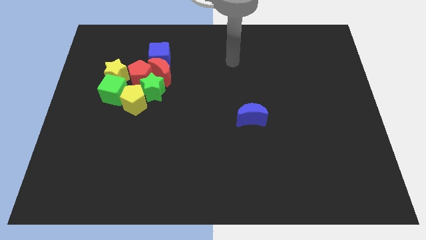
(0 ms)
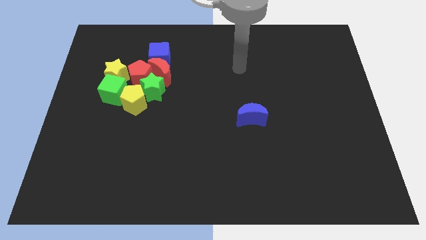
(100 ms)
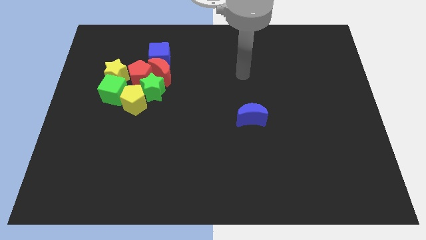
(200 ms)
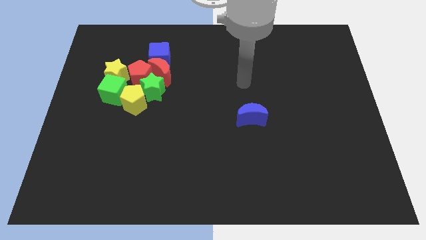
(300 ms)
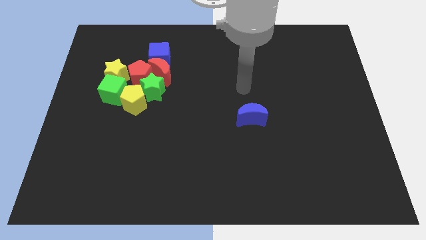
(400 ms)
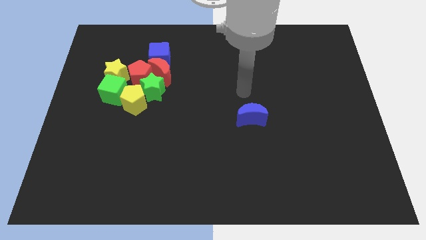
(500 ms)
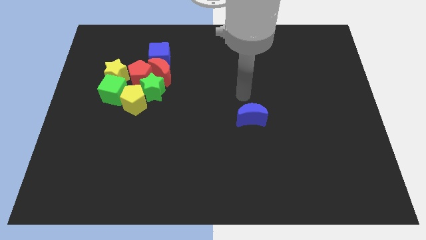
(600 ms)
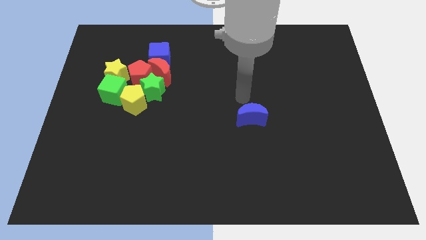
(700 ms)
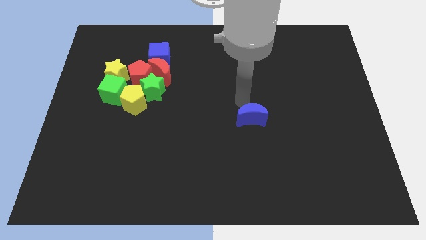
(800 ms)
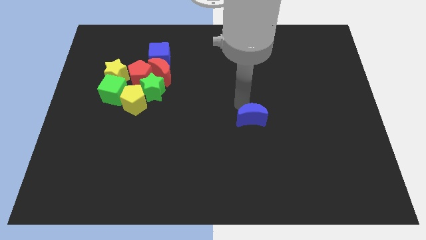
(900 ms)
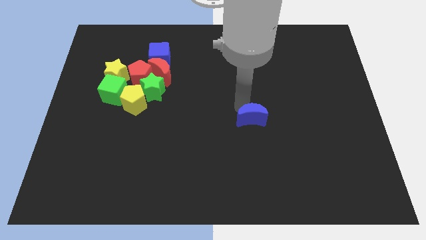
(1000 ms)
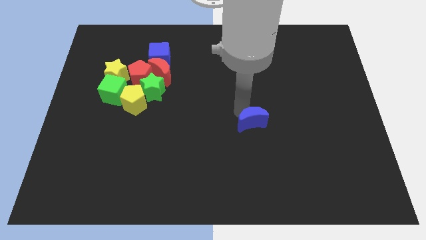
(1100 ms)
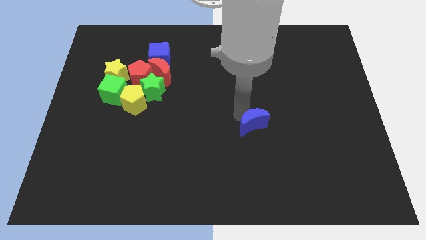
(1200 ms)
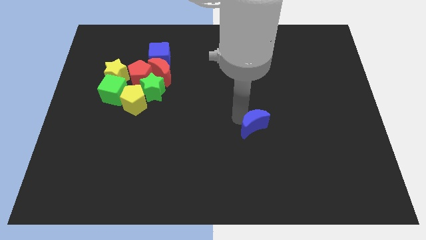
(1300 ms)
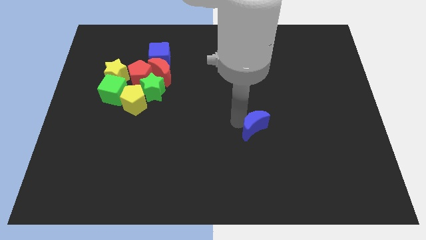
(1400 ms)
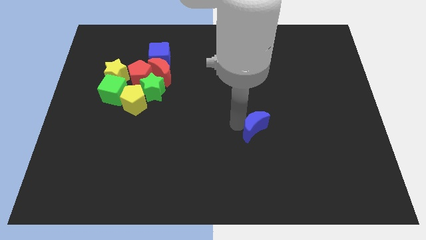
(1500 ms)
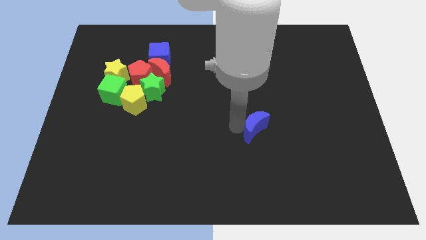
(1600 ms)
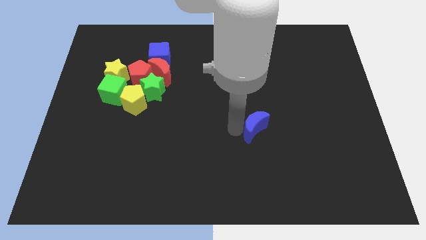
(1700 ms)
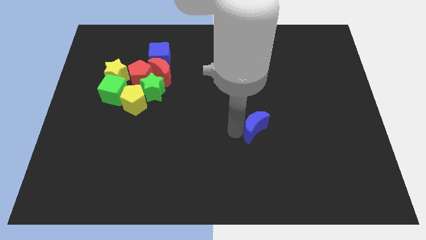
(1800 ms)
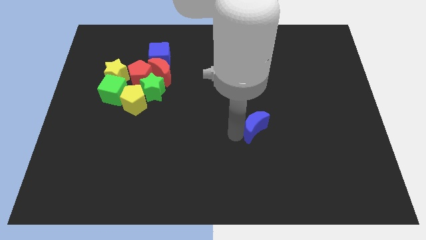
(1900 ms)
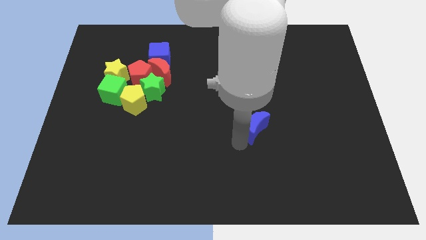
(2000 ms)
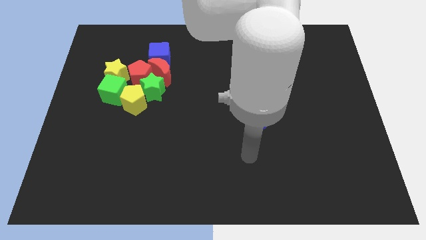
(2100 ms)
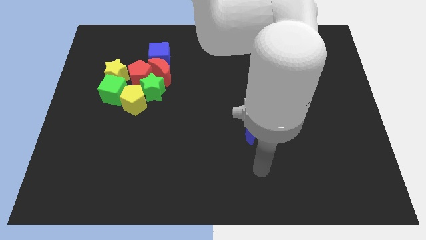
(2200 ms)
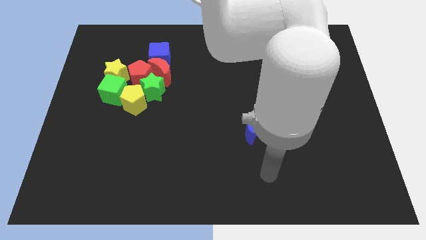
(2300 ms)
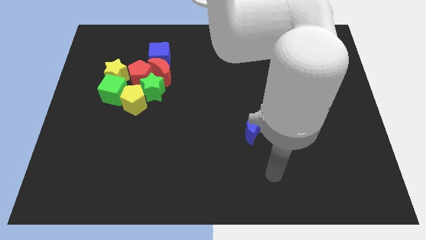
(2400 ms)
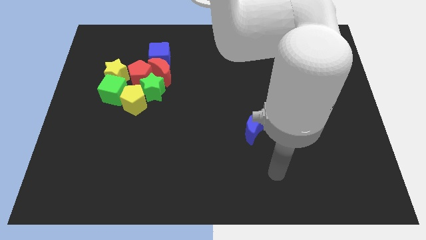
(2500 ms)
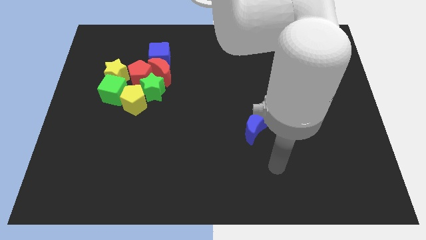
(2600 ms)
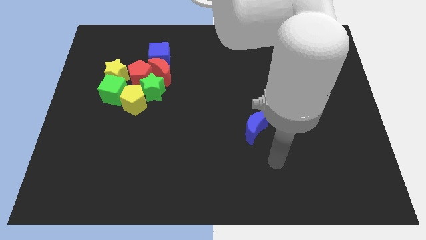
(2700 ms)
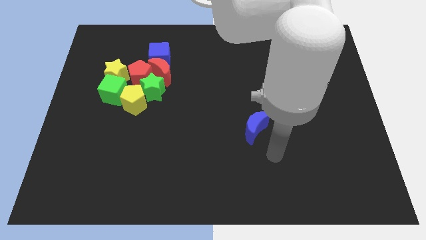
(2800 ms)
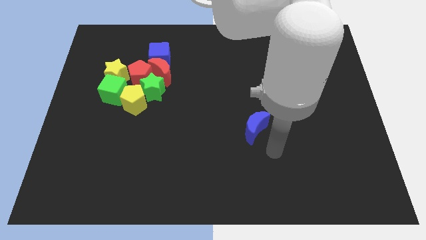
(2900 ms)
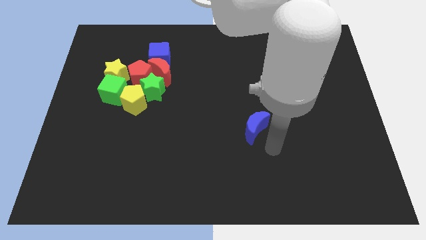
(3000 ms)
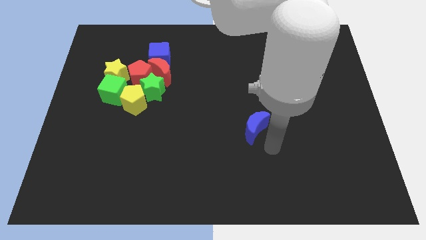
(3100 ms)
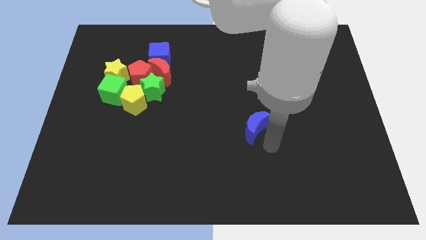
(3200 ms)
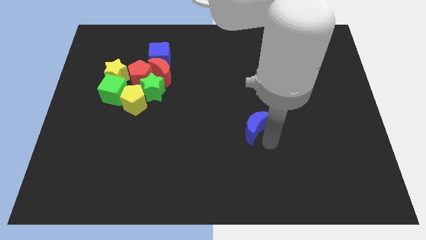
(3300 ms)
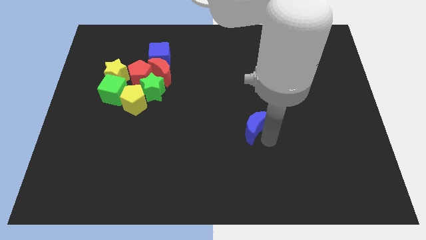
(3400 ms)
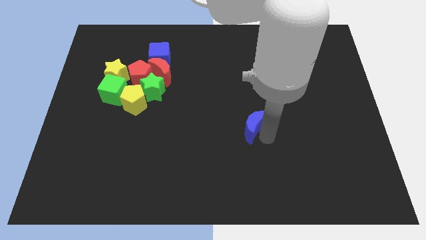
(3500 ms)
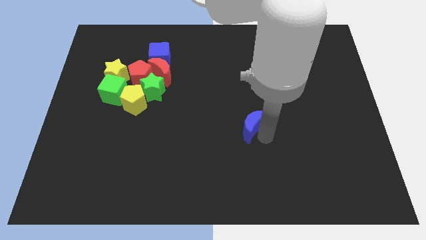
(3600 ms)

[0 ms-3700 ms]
place the arm below the blue crescent

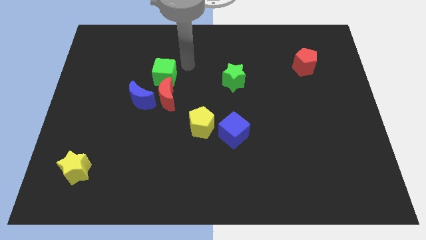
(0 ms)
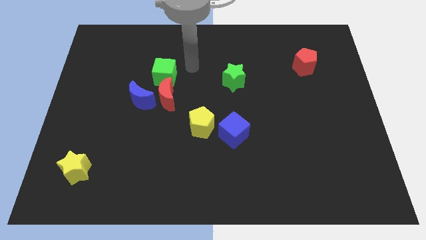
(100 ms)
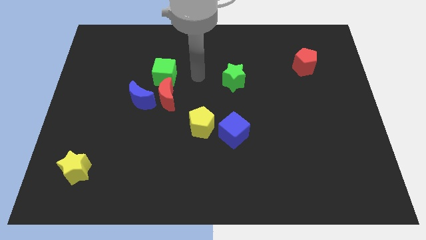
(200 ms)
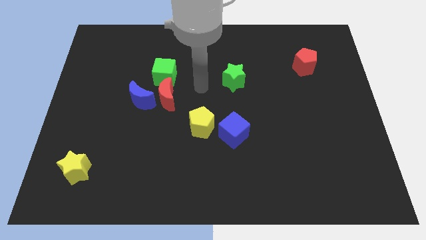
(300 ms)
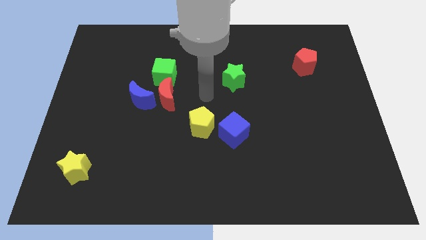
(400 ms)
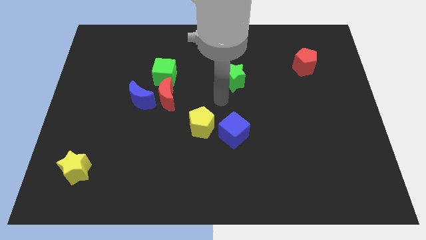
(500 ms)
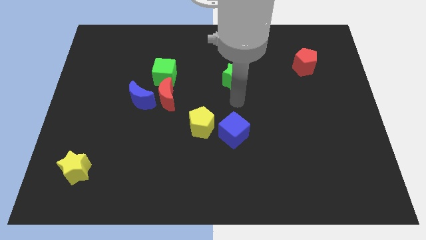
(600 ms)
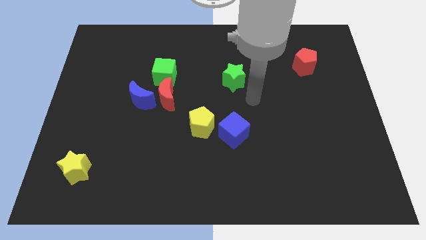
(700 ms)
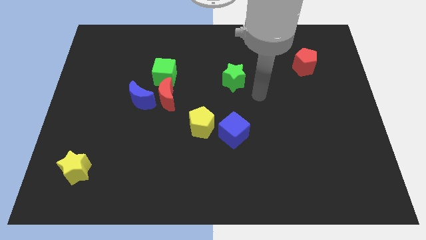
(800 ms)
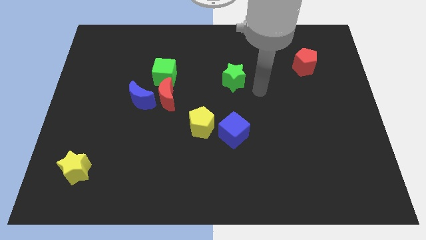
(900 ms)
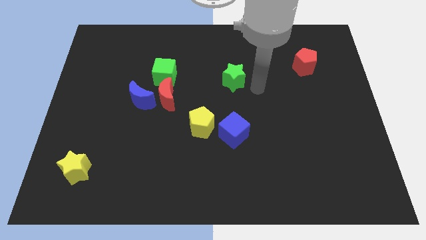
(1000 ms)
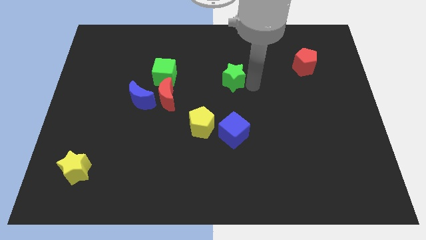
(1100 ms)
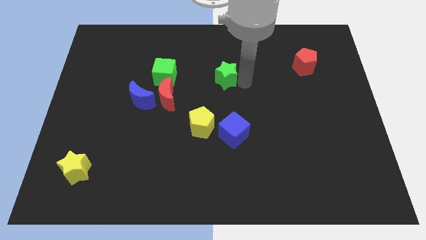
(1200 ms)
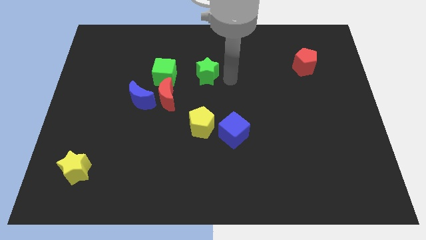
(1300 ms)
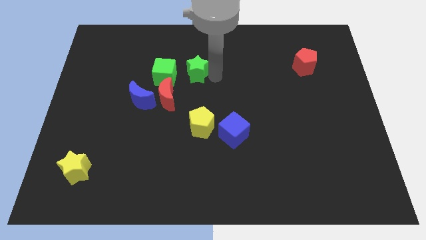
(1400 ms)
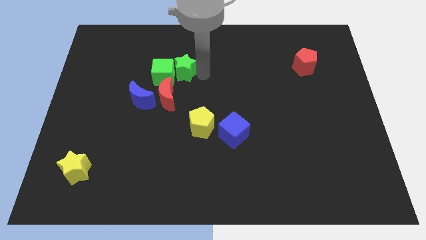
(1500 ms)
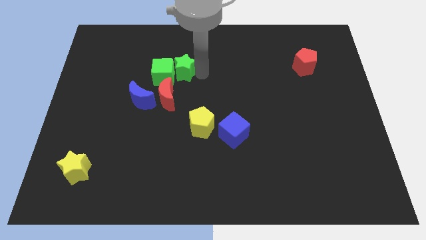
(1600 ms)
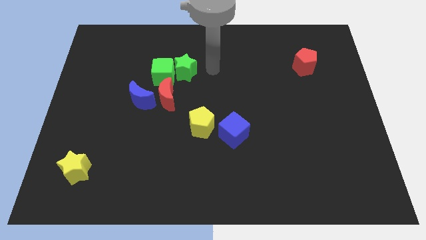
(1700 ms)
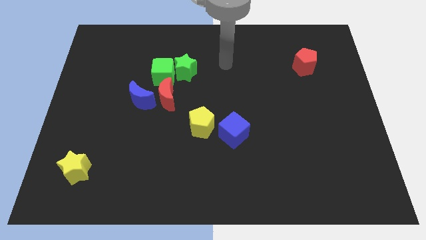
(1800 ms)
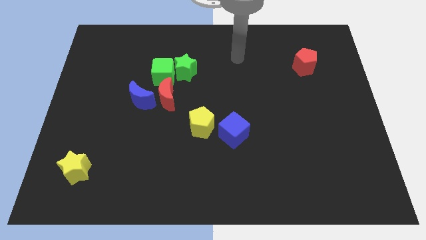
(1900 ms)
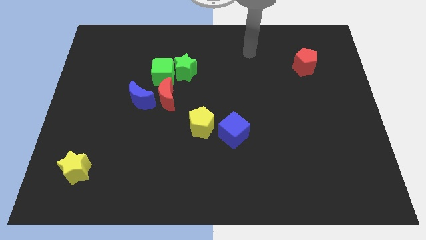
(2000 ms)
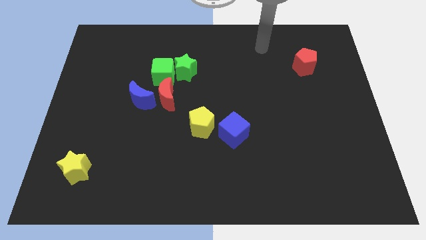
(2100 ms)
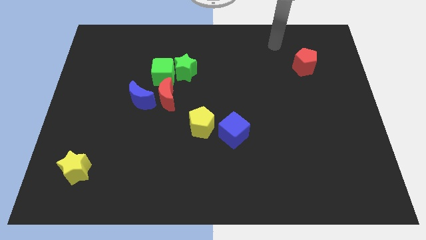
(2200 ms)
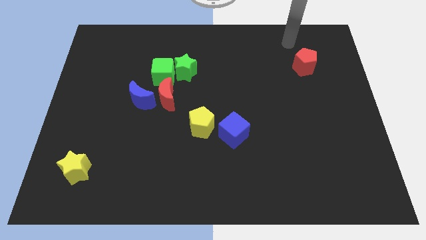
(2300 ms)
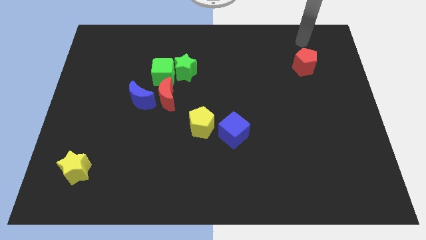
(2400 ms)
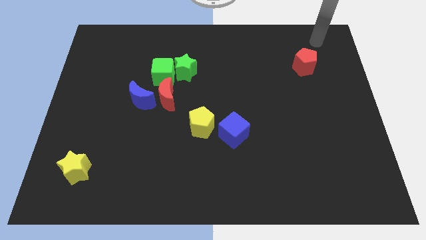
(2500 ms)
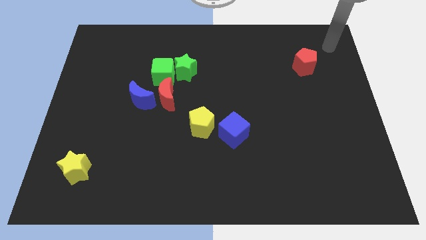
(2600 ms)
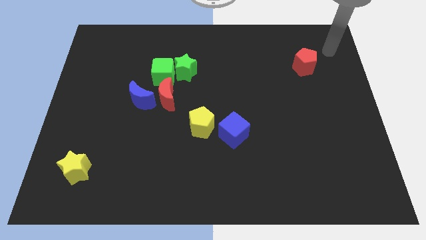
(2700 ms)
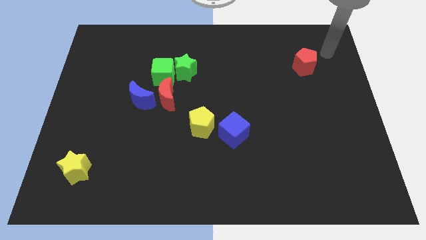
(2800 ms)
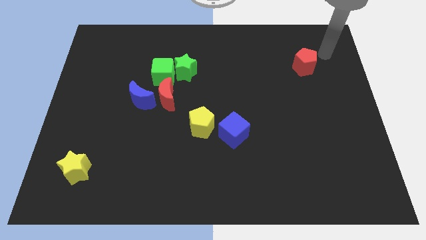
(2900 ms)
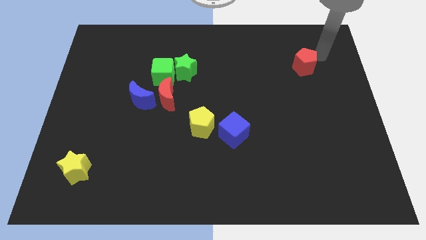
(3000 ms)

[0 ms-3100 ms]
push the green star into the green cube

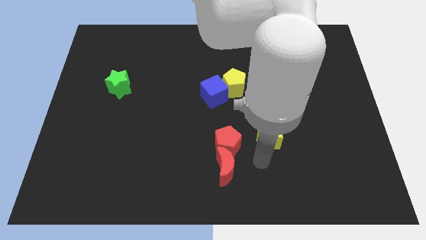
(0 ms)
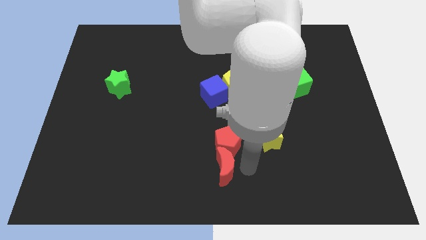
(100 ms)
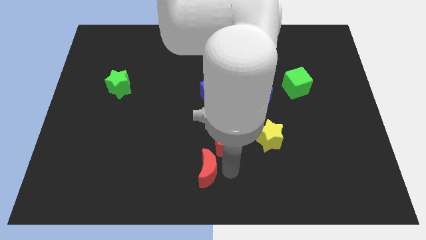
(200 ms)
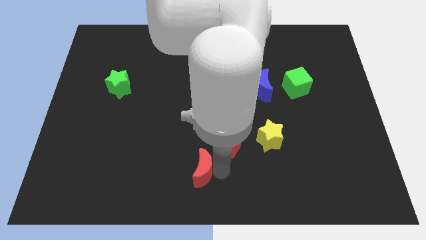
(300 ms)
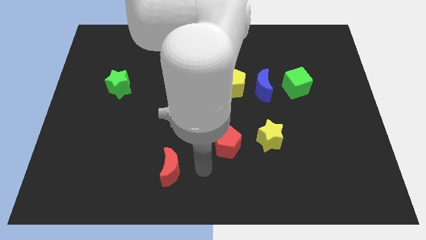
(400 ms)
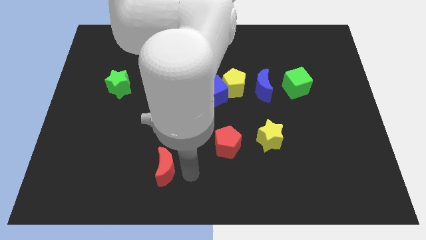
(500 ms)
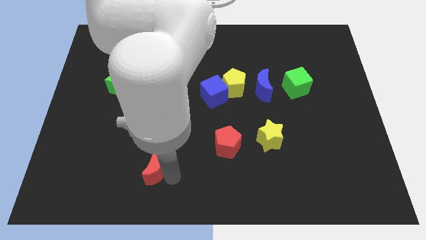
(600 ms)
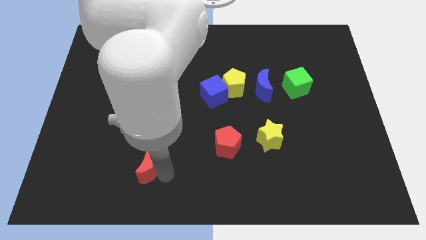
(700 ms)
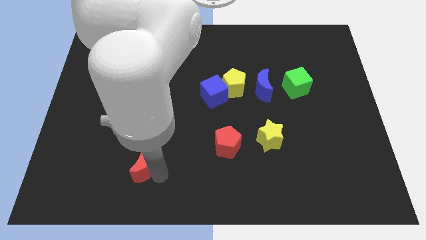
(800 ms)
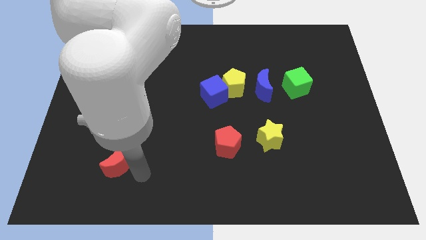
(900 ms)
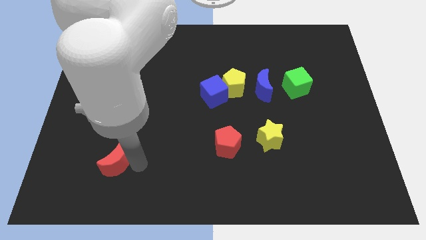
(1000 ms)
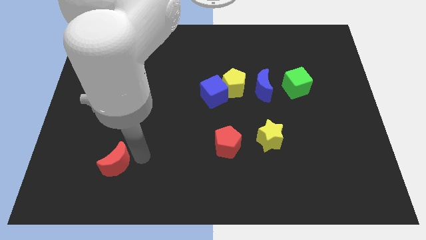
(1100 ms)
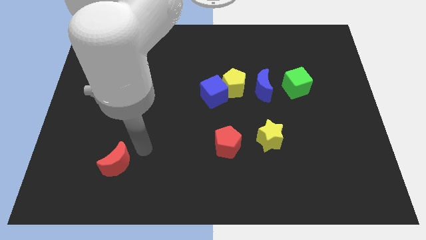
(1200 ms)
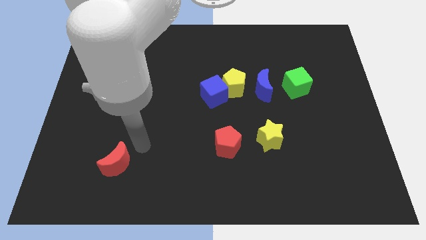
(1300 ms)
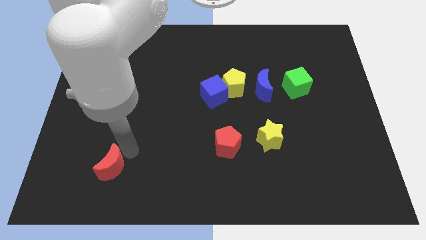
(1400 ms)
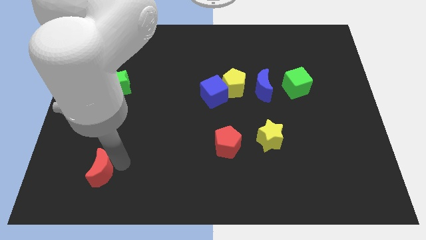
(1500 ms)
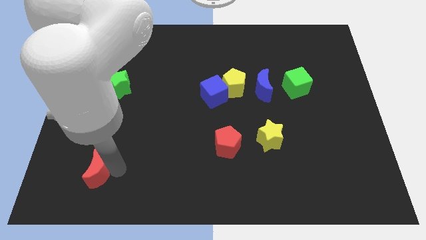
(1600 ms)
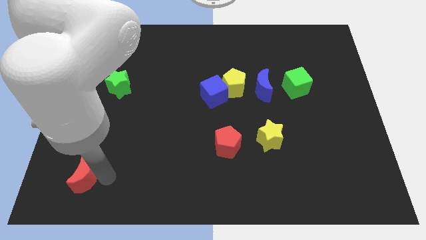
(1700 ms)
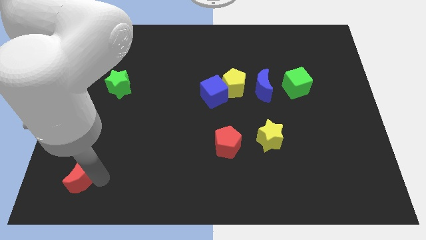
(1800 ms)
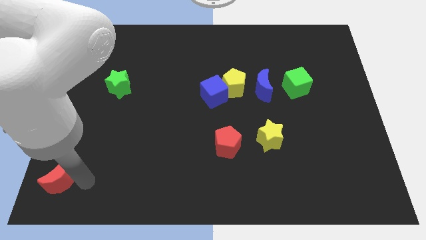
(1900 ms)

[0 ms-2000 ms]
move red crescent to the left bottom corner of the board

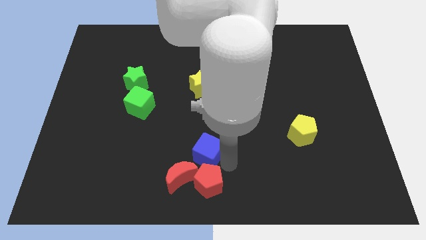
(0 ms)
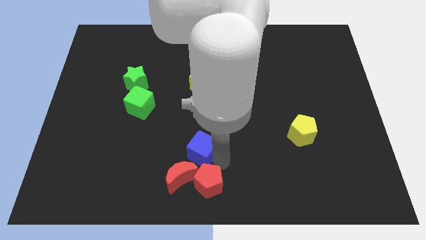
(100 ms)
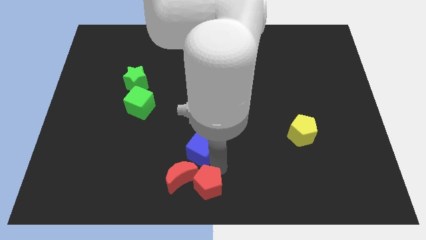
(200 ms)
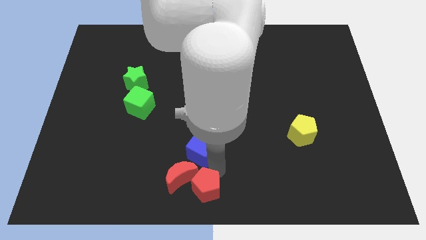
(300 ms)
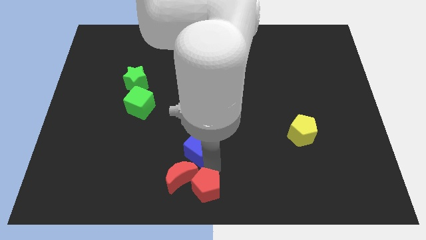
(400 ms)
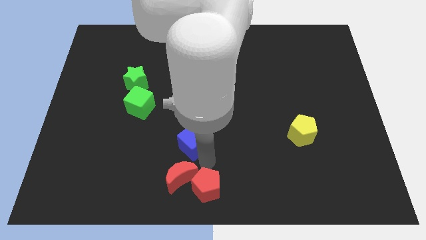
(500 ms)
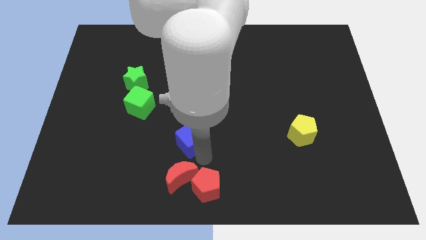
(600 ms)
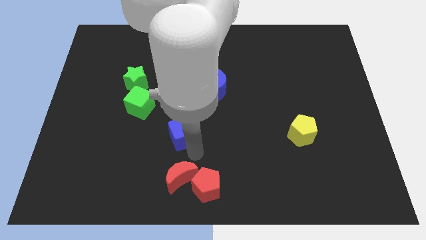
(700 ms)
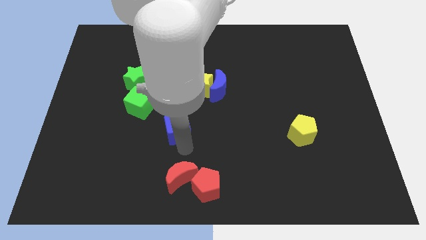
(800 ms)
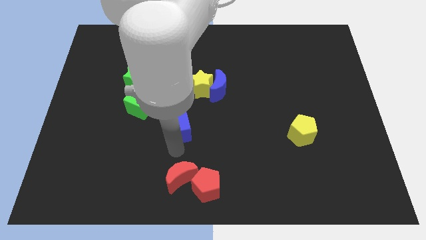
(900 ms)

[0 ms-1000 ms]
place the blue cube vertically above the red crescent
